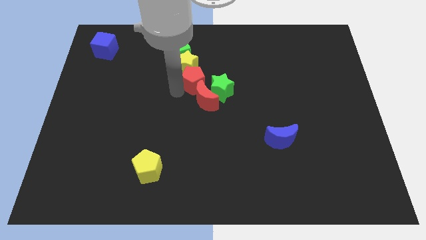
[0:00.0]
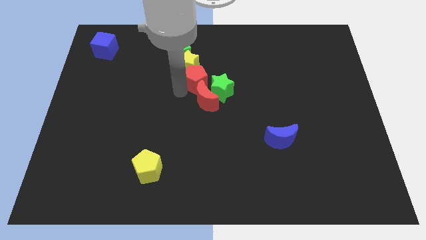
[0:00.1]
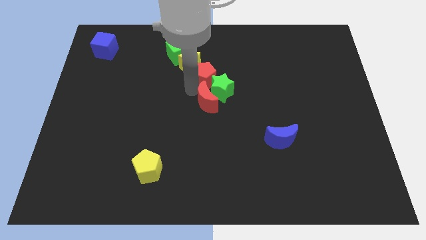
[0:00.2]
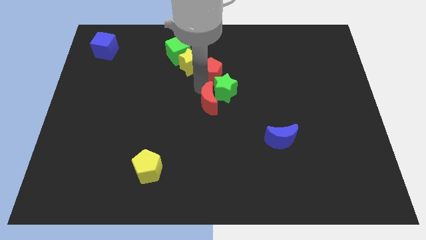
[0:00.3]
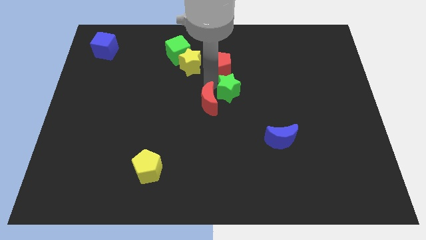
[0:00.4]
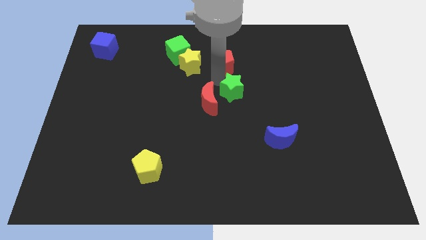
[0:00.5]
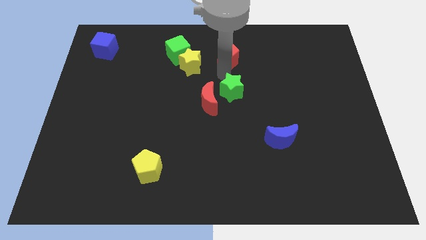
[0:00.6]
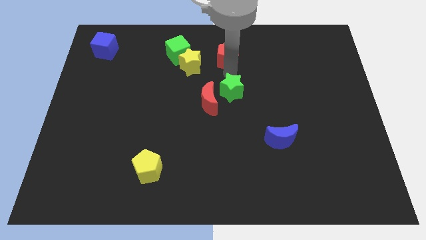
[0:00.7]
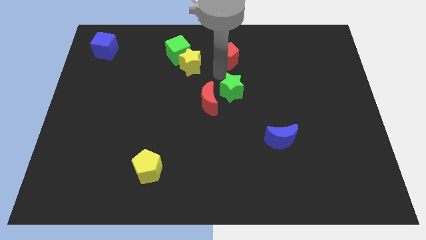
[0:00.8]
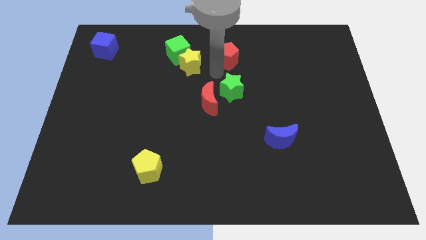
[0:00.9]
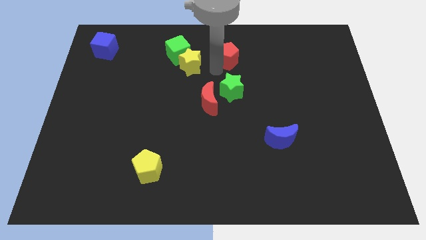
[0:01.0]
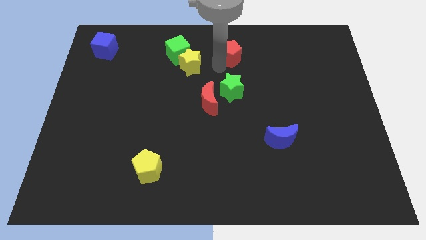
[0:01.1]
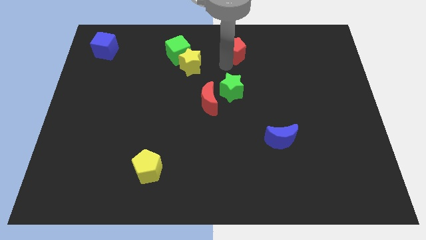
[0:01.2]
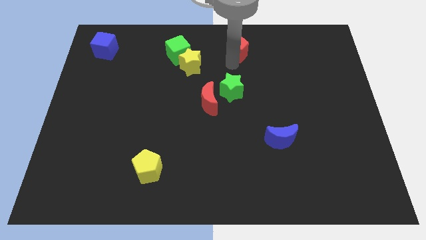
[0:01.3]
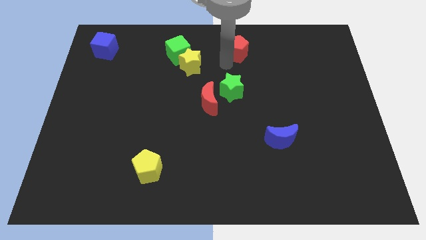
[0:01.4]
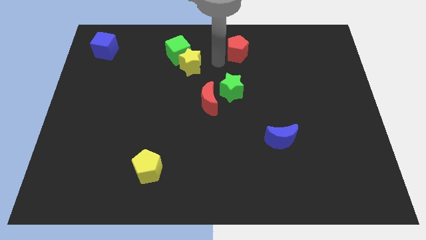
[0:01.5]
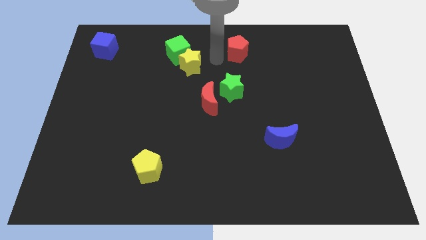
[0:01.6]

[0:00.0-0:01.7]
place the red pentagon vertically above the green star

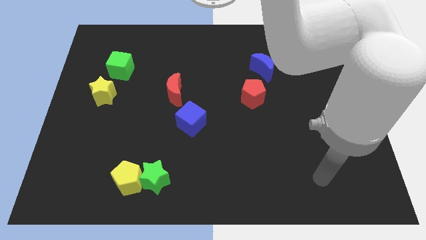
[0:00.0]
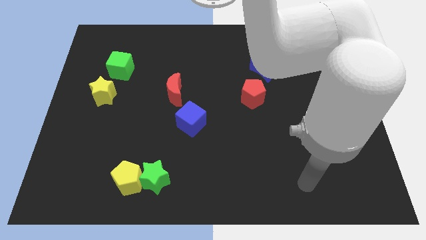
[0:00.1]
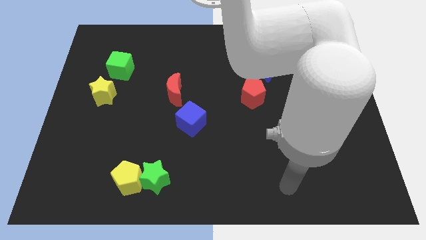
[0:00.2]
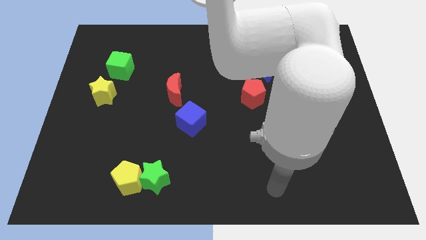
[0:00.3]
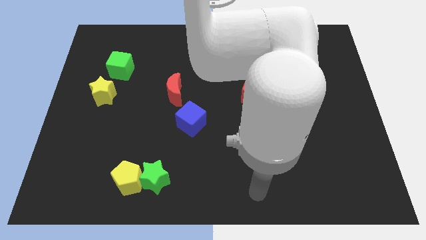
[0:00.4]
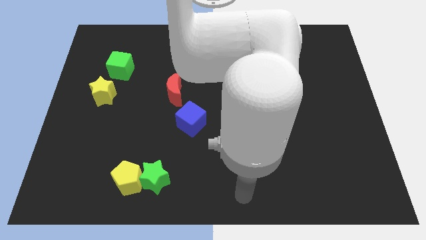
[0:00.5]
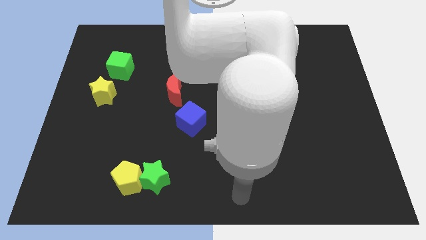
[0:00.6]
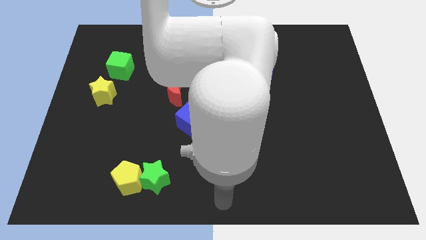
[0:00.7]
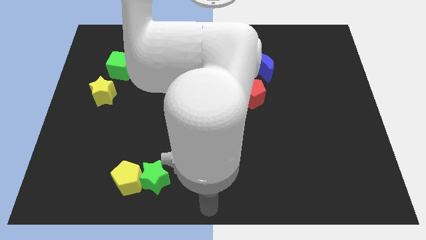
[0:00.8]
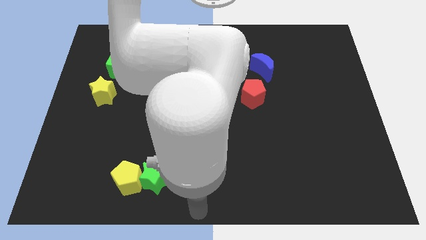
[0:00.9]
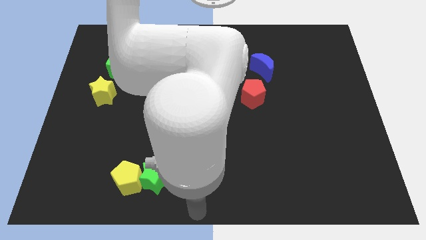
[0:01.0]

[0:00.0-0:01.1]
put your arm diagonally bottom right to the green star

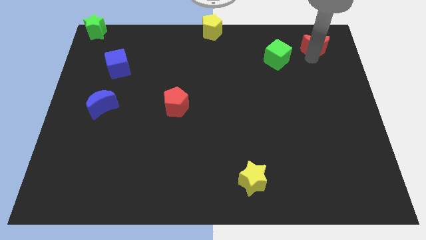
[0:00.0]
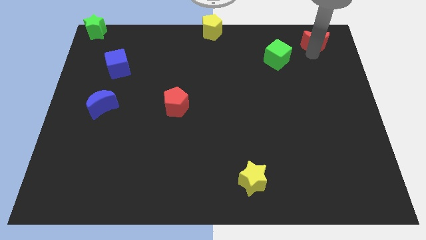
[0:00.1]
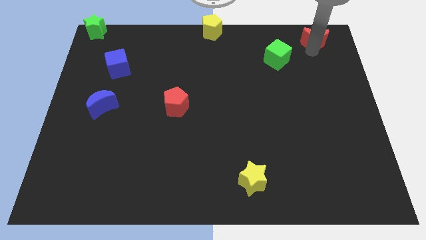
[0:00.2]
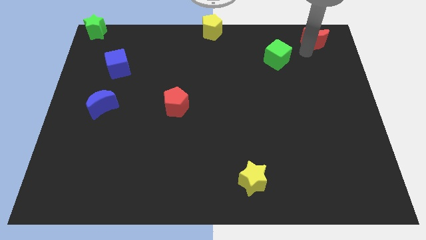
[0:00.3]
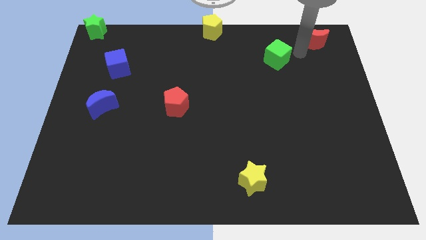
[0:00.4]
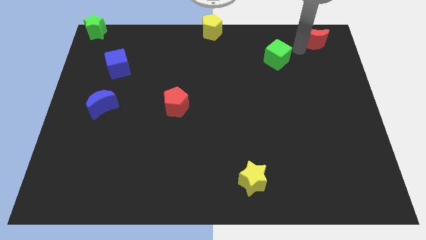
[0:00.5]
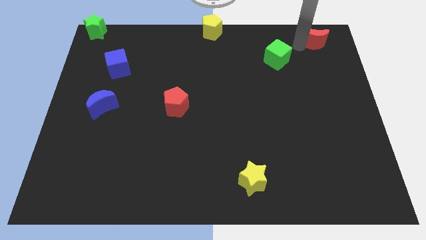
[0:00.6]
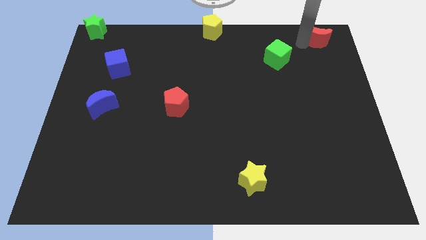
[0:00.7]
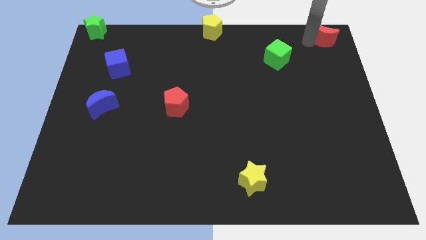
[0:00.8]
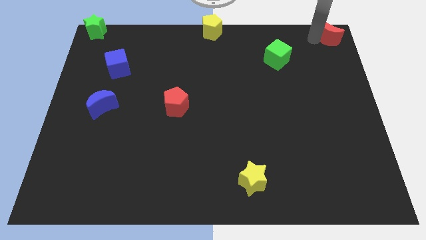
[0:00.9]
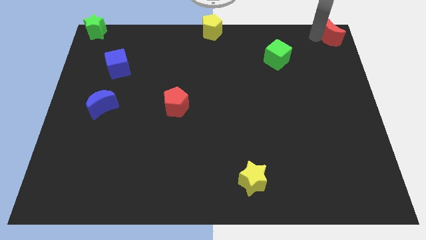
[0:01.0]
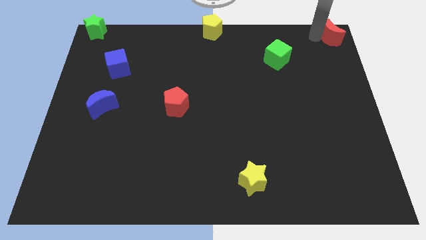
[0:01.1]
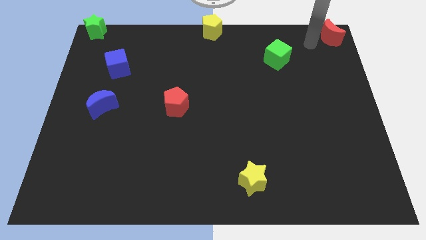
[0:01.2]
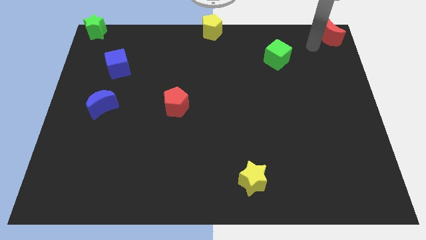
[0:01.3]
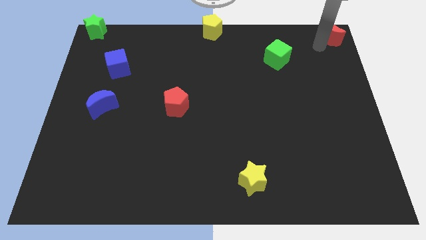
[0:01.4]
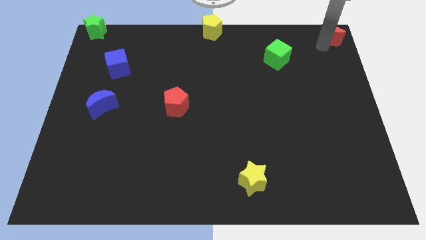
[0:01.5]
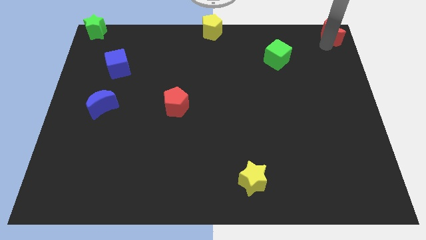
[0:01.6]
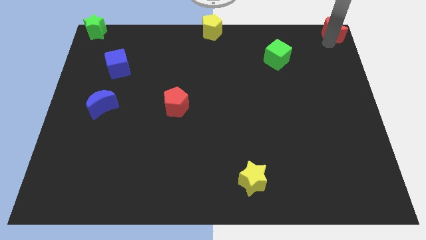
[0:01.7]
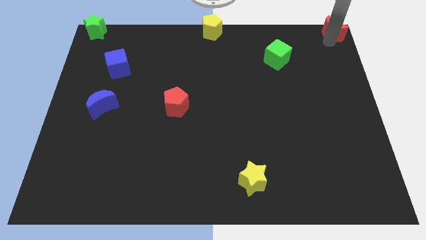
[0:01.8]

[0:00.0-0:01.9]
move the red moon to the top right corner of the board

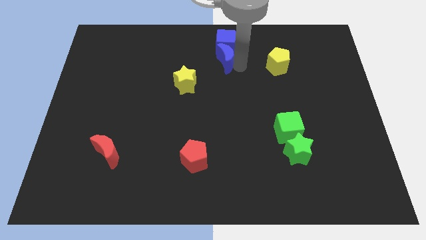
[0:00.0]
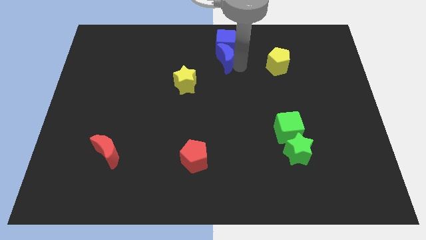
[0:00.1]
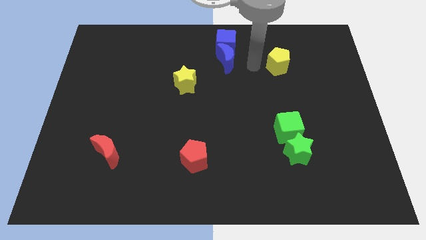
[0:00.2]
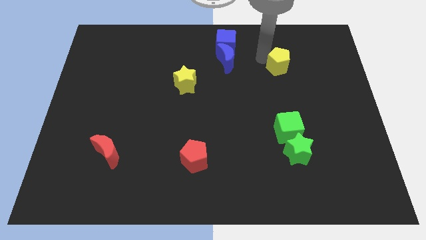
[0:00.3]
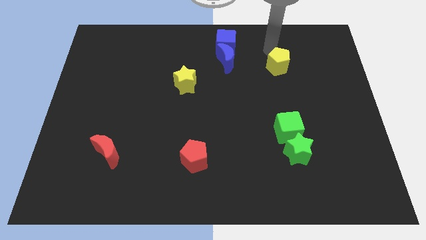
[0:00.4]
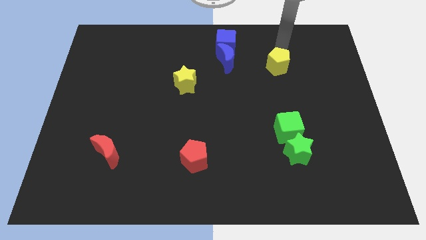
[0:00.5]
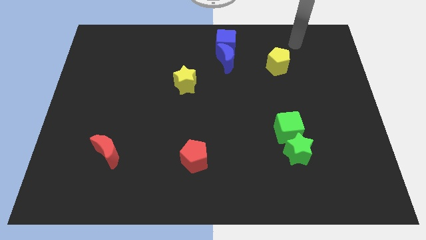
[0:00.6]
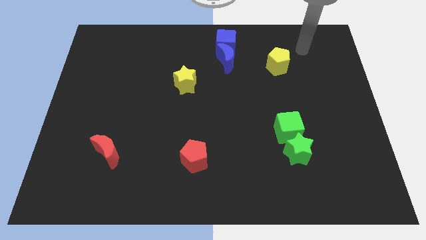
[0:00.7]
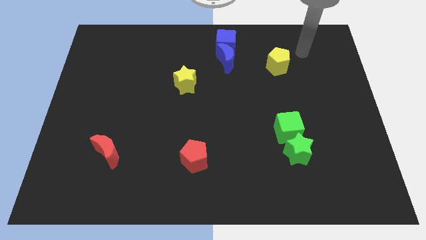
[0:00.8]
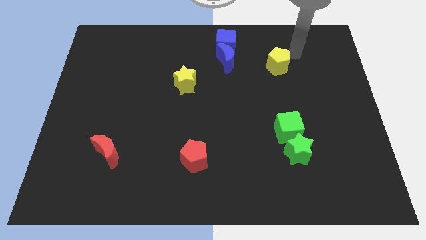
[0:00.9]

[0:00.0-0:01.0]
push the blue blocks to the top center of the board

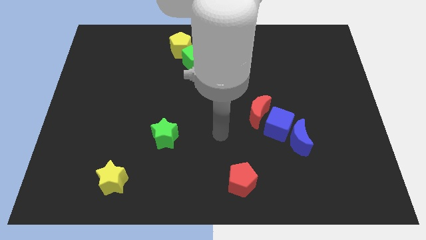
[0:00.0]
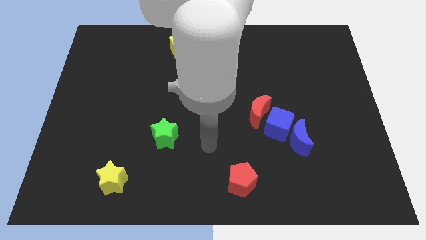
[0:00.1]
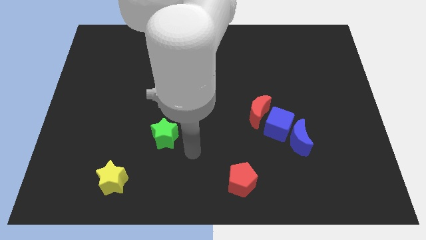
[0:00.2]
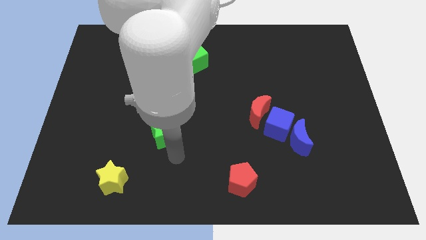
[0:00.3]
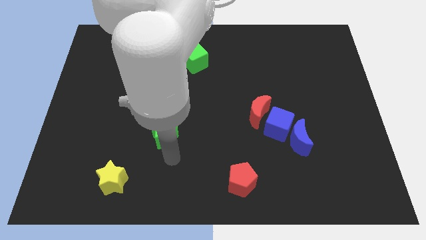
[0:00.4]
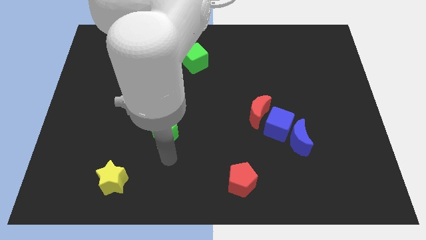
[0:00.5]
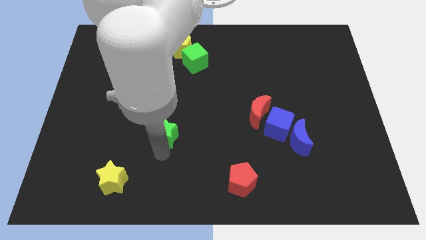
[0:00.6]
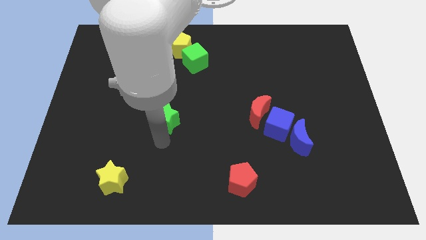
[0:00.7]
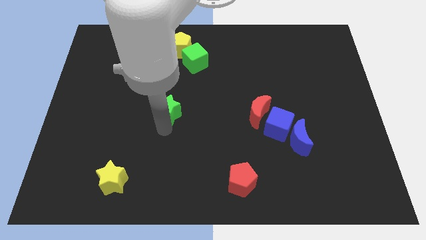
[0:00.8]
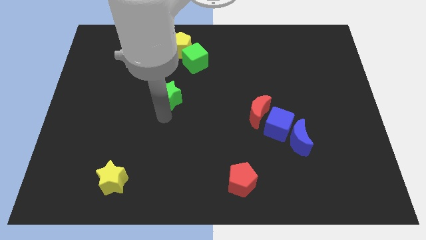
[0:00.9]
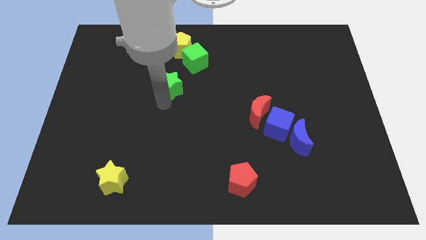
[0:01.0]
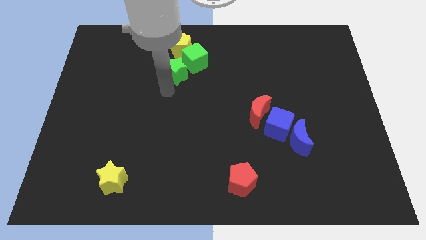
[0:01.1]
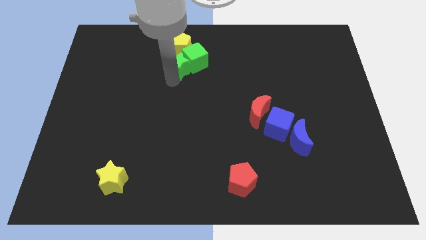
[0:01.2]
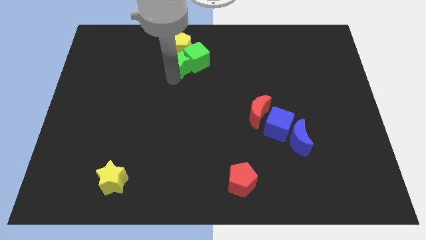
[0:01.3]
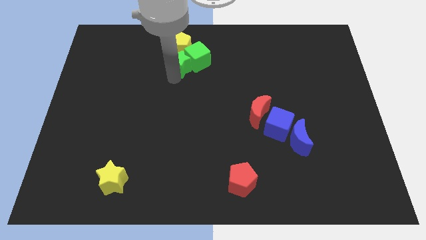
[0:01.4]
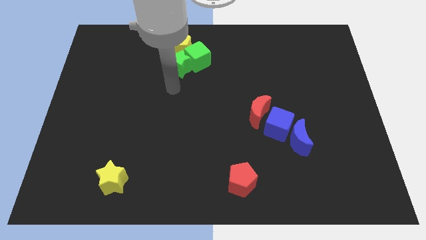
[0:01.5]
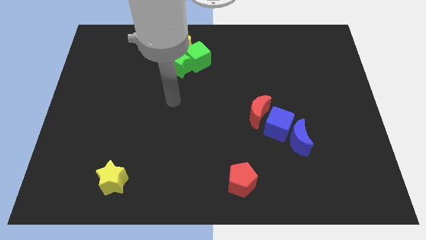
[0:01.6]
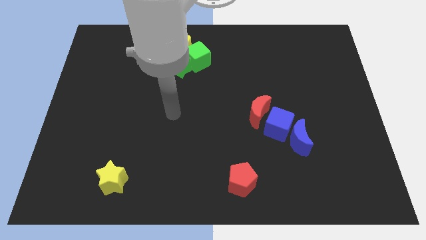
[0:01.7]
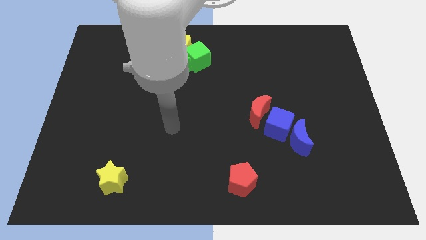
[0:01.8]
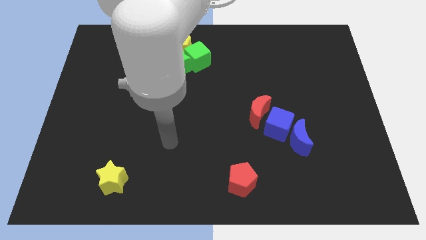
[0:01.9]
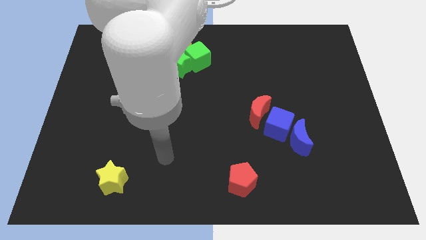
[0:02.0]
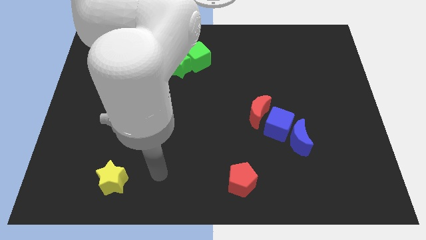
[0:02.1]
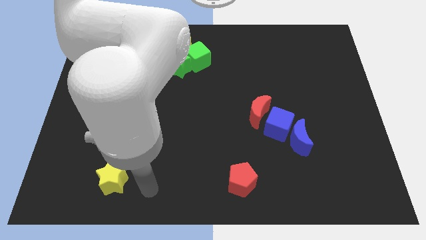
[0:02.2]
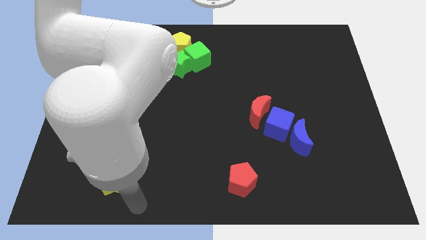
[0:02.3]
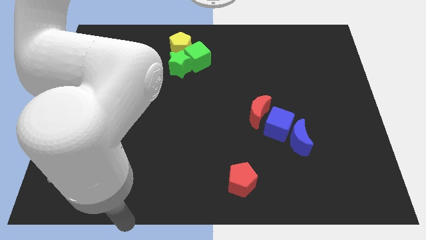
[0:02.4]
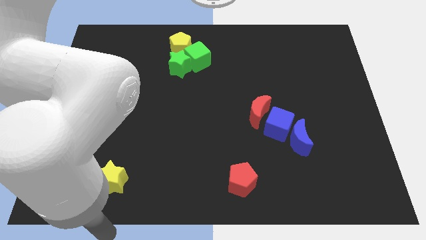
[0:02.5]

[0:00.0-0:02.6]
move green star below the yellow pentagon

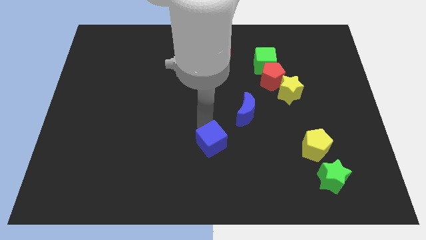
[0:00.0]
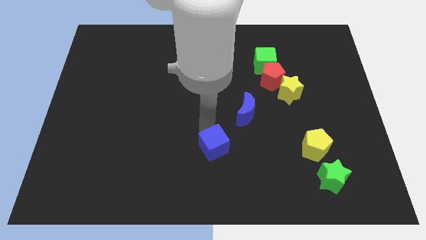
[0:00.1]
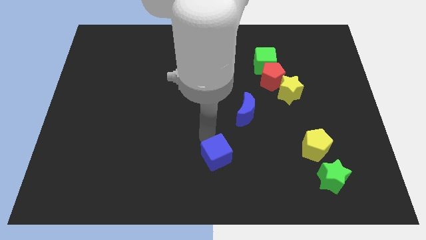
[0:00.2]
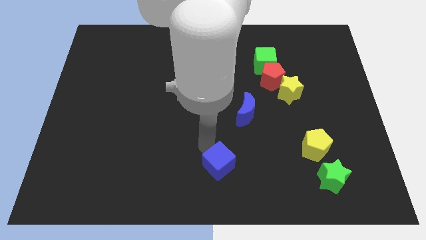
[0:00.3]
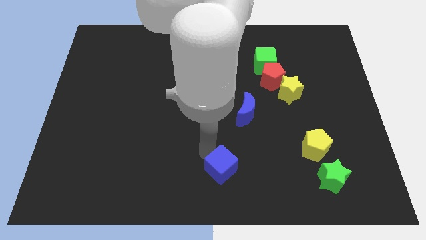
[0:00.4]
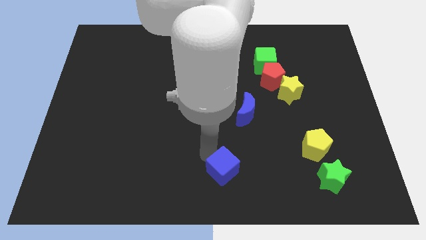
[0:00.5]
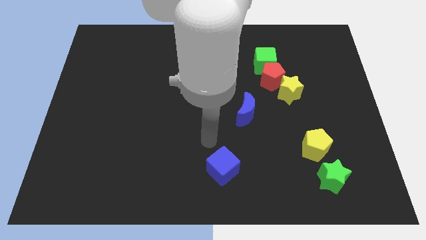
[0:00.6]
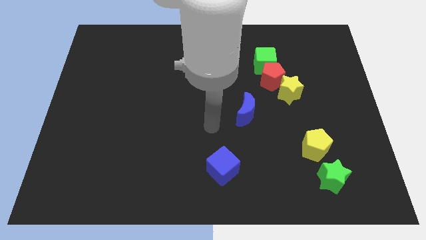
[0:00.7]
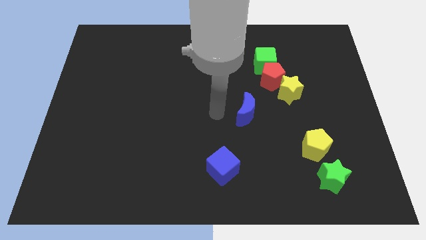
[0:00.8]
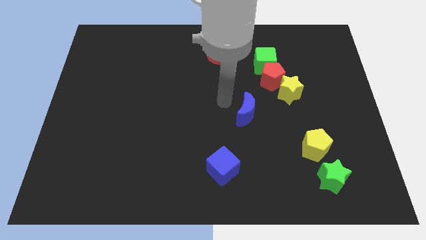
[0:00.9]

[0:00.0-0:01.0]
place the blue cube top left to the green star
